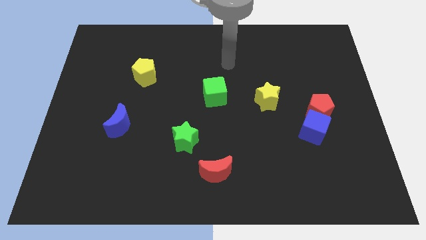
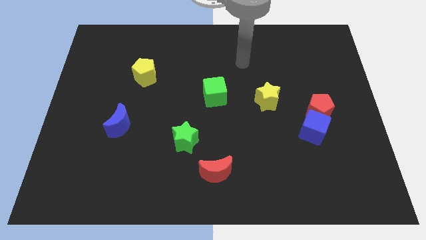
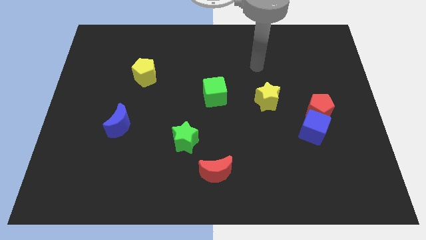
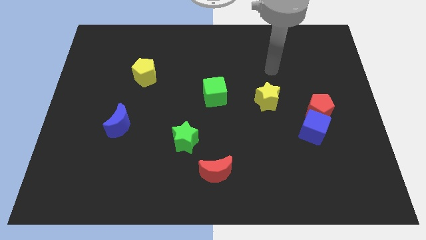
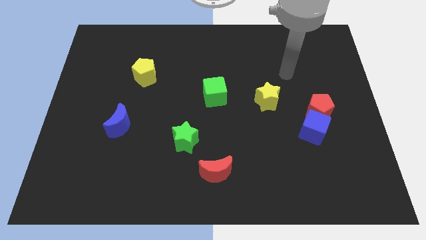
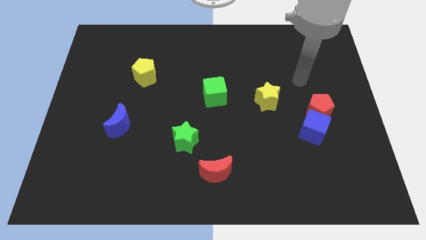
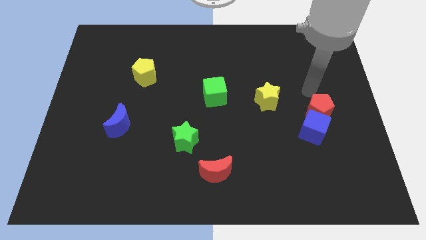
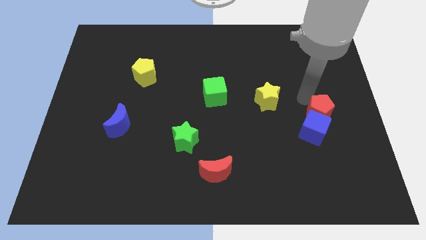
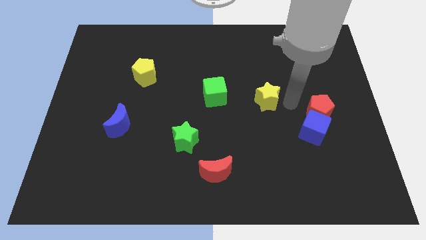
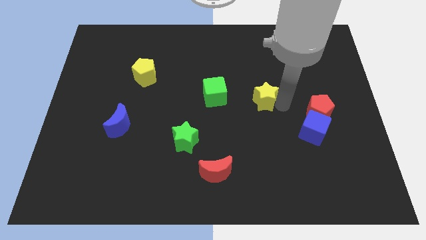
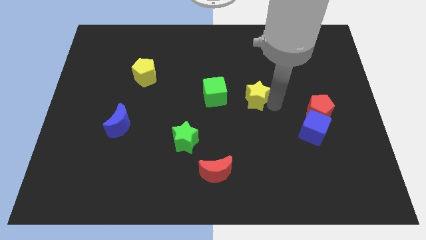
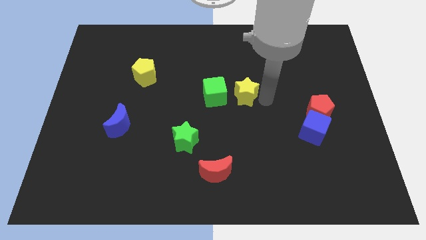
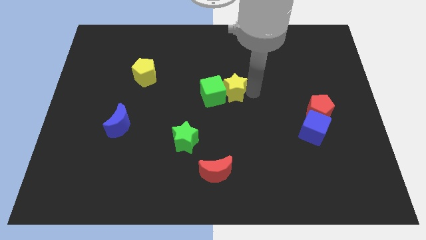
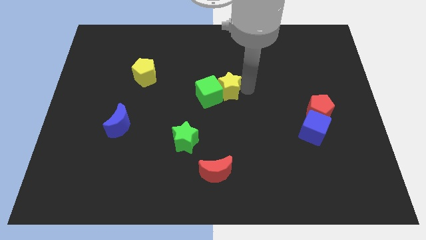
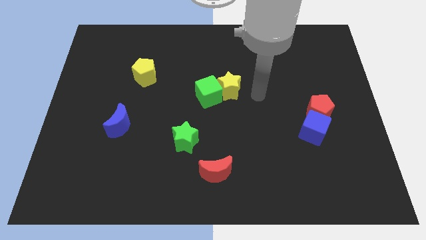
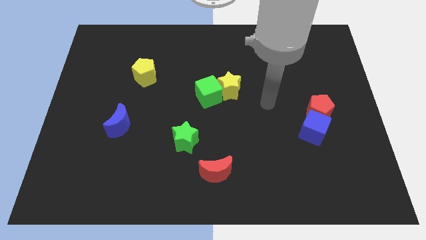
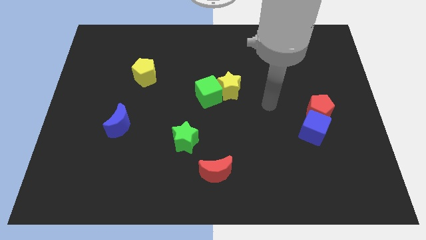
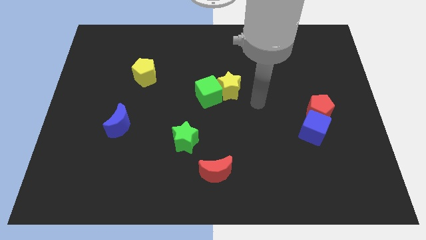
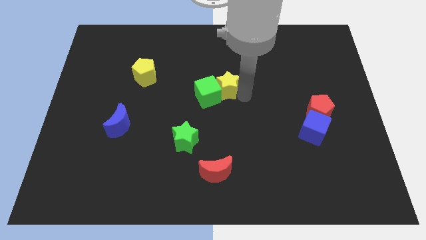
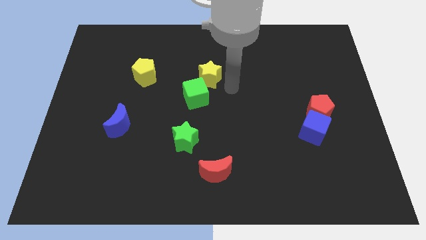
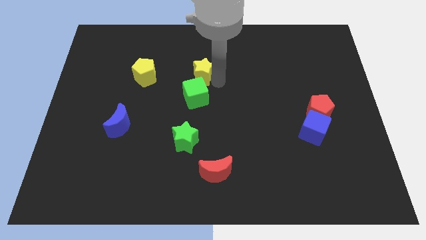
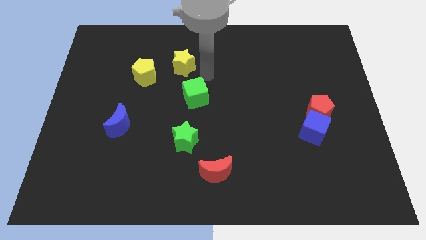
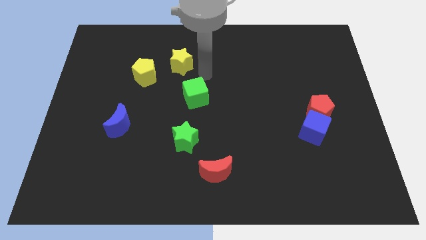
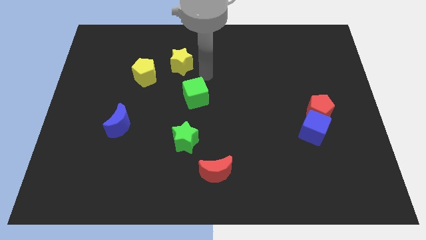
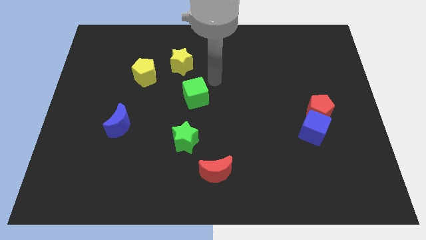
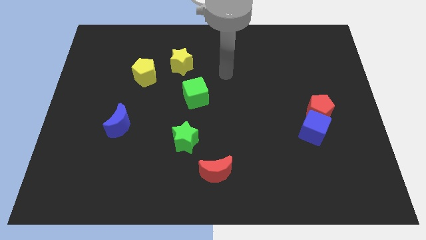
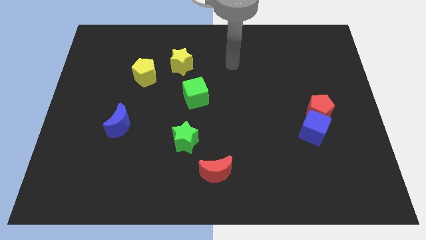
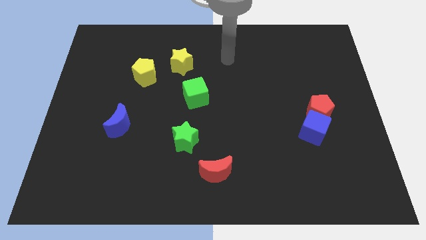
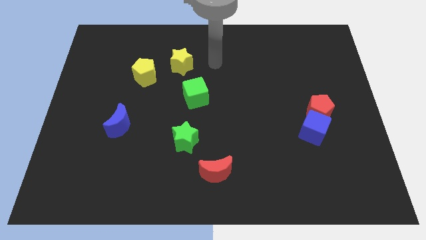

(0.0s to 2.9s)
place the yellow star to the right of yellow pentagon

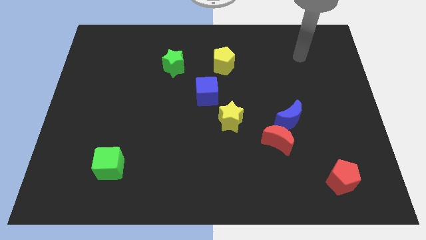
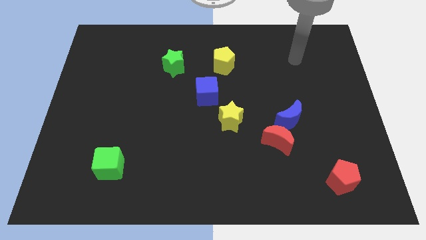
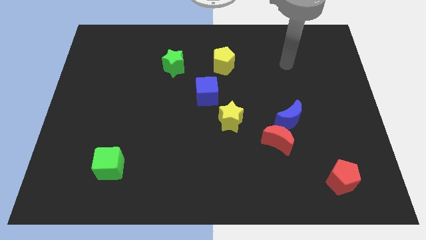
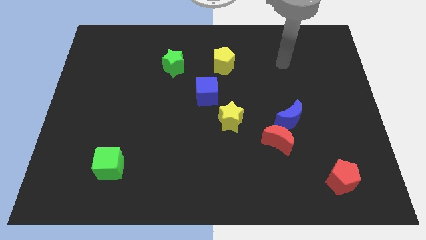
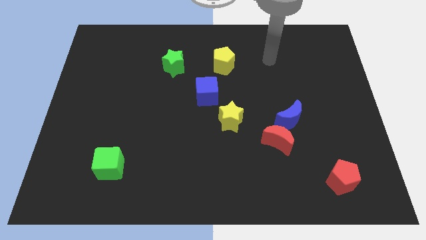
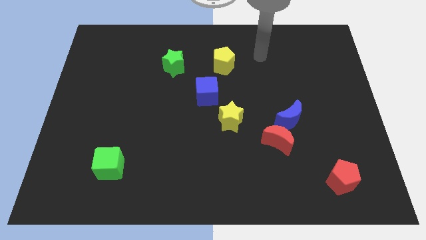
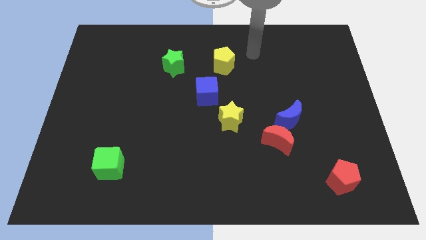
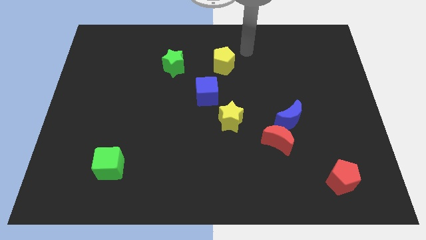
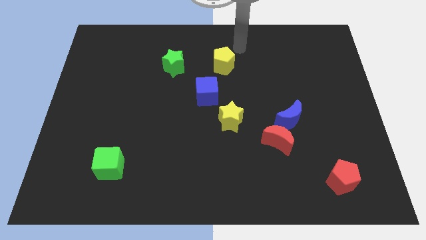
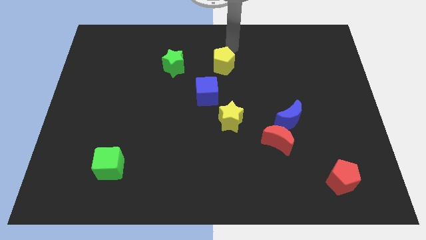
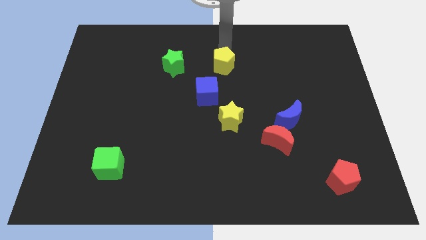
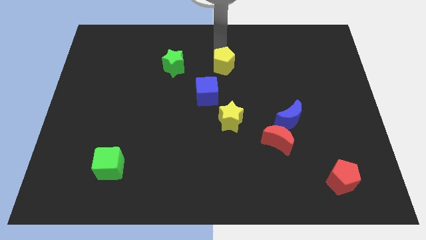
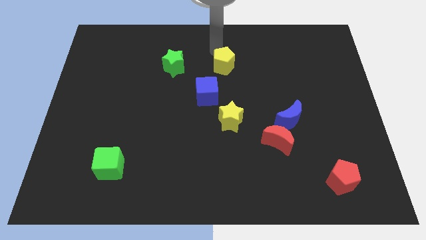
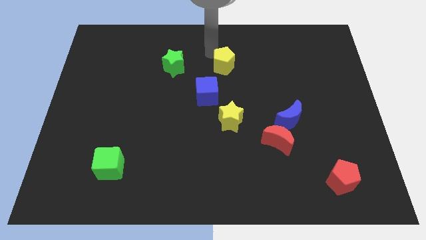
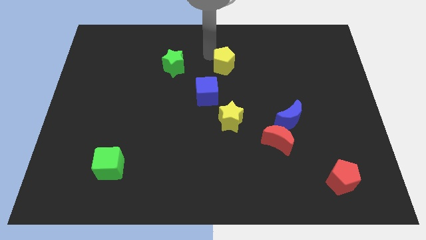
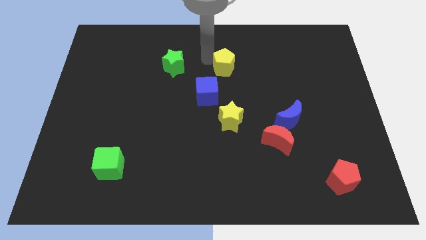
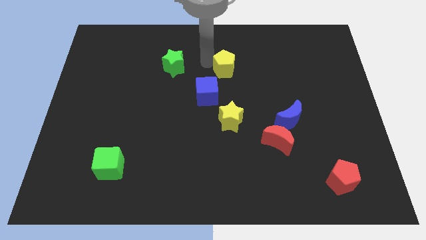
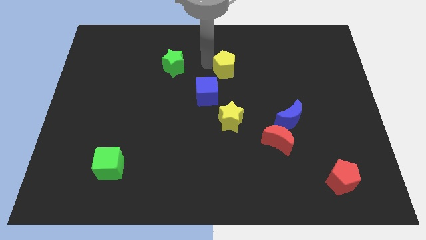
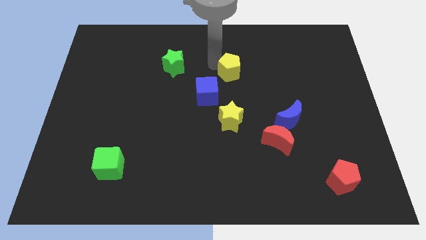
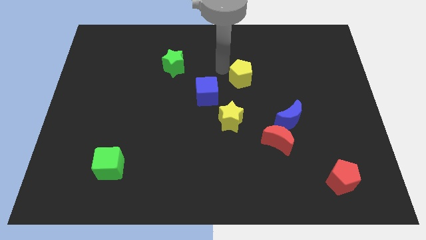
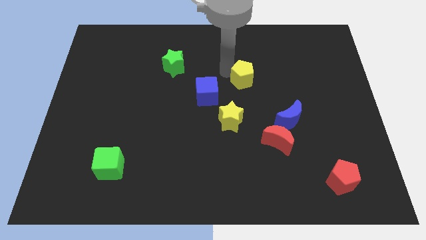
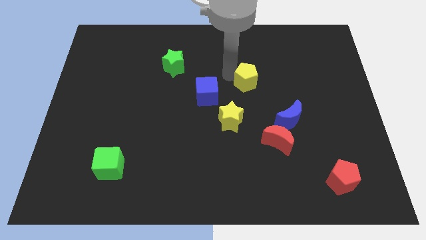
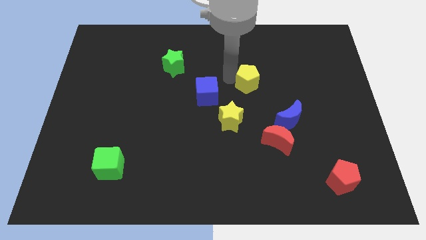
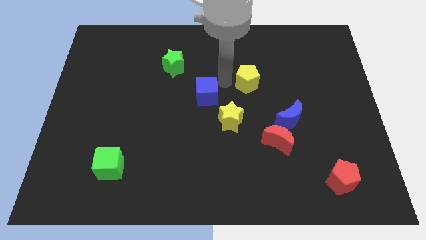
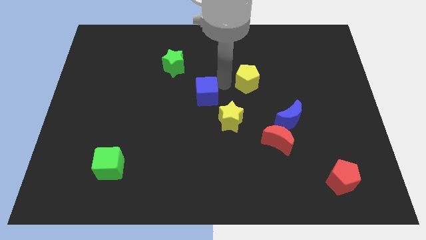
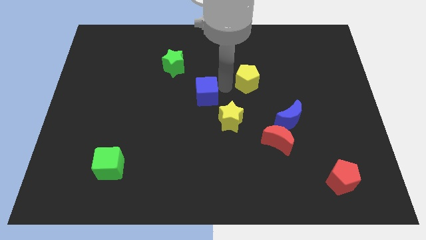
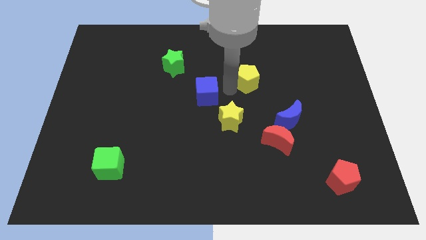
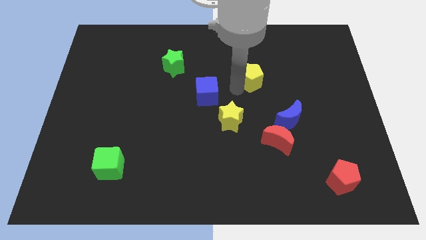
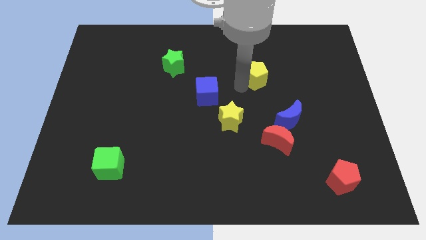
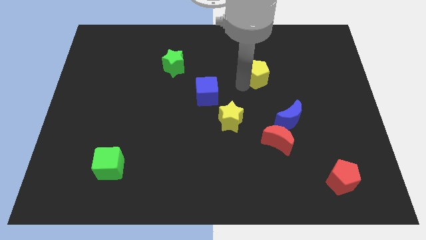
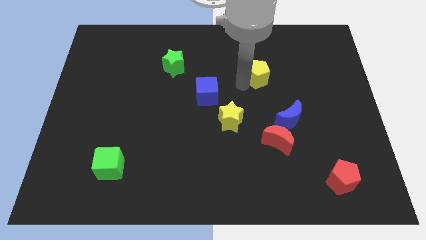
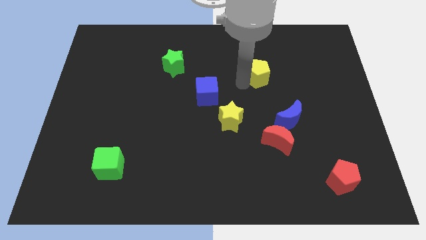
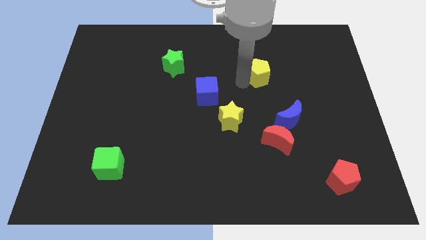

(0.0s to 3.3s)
move the yellow pentagon diagonally to the top right of the blue cube

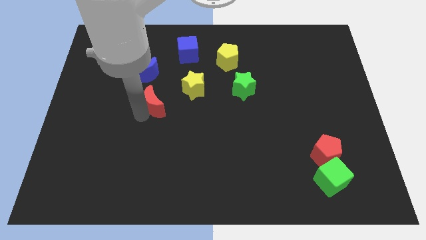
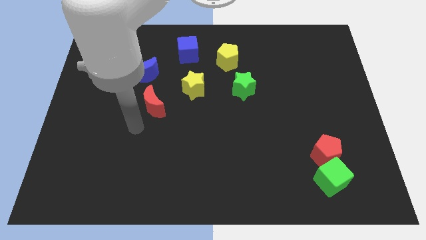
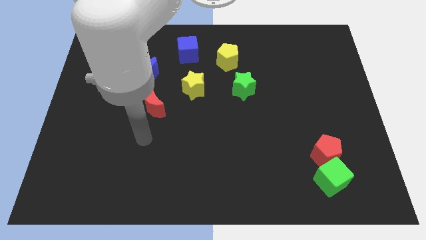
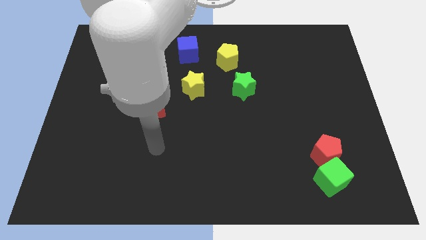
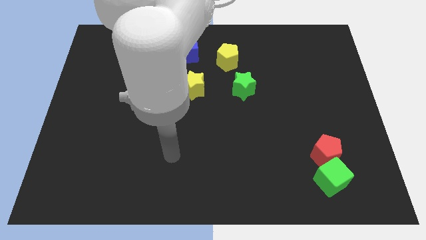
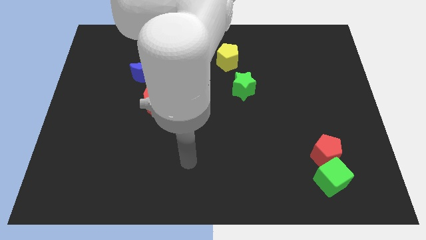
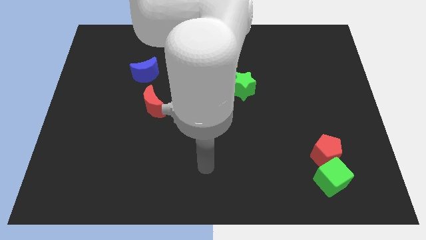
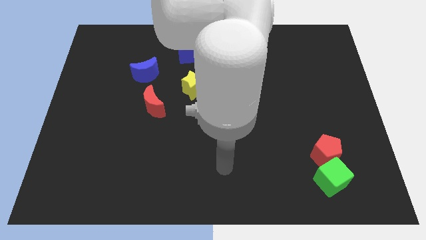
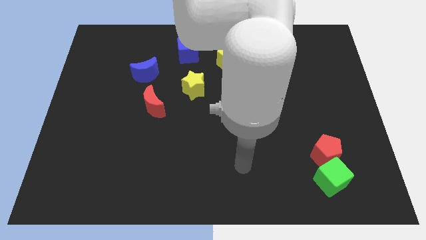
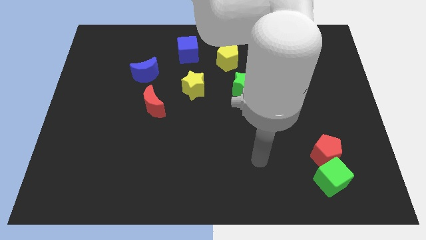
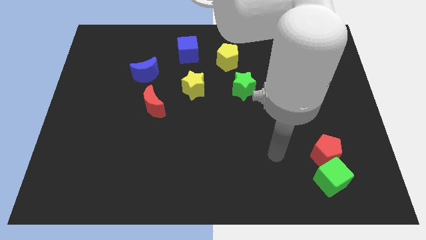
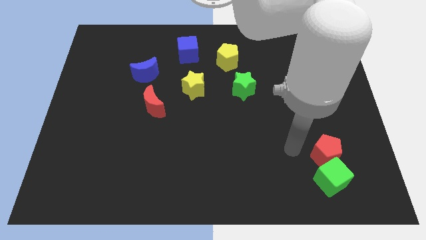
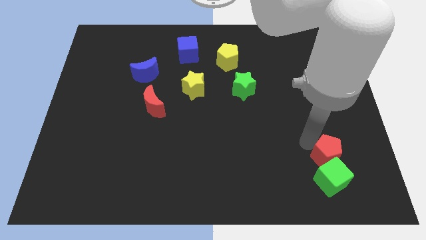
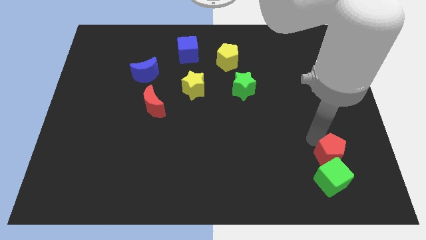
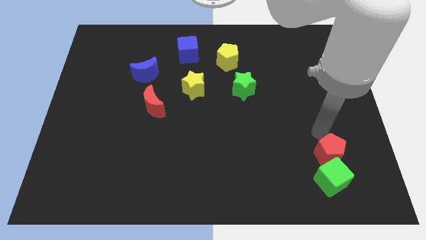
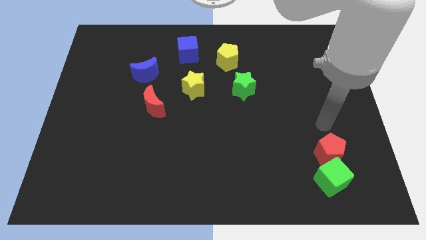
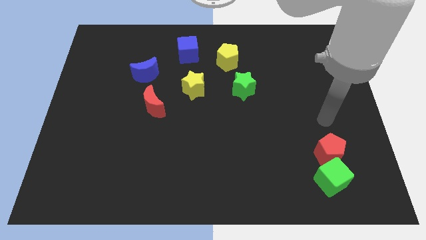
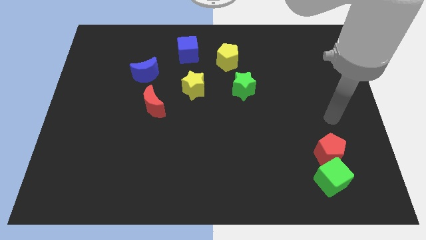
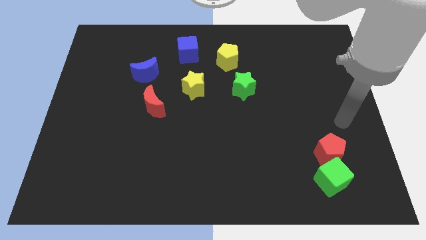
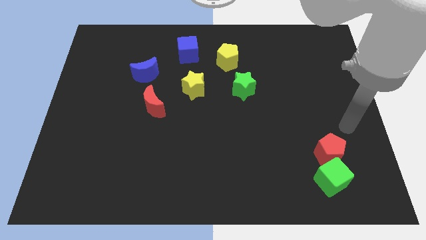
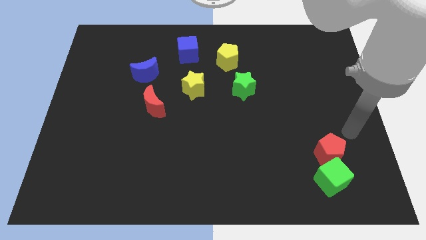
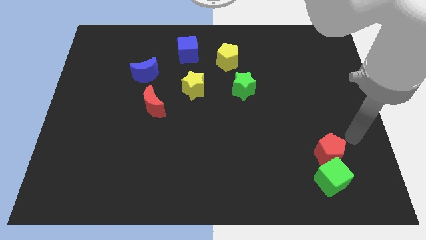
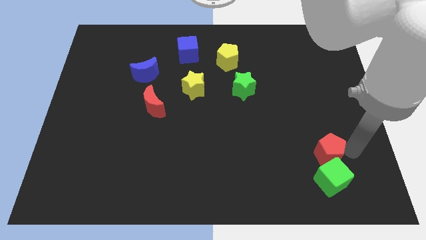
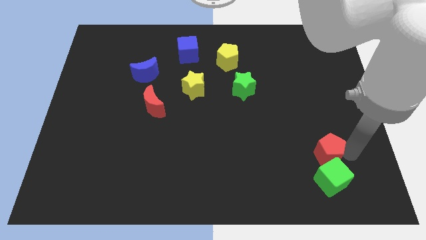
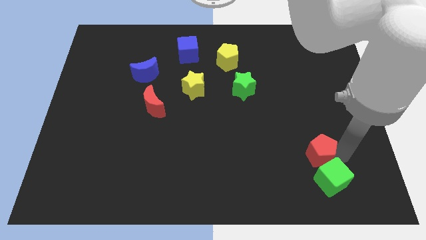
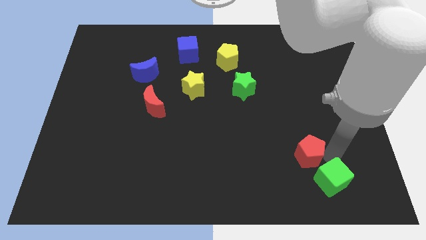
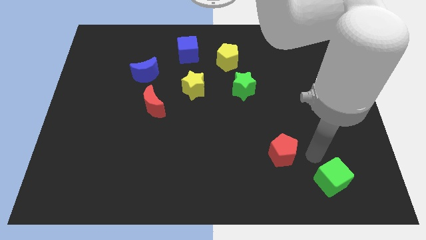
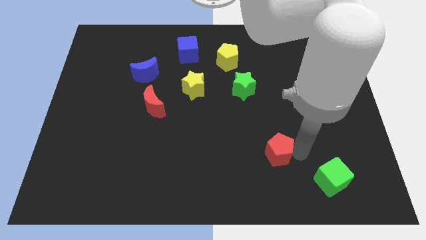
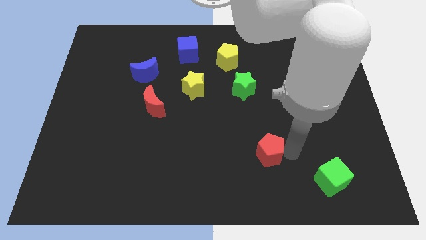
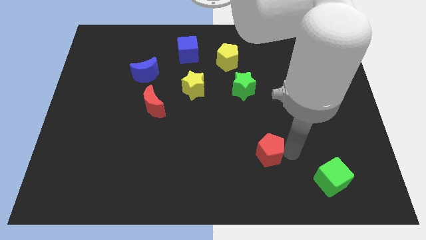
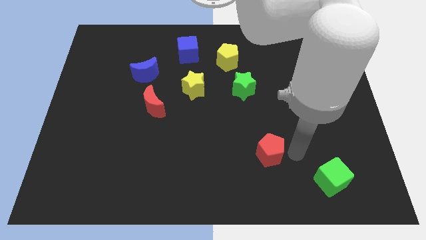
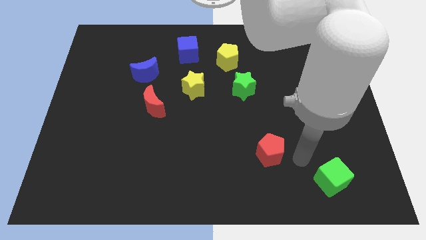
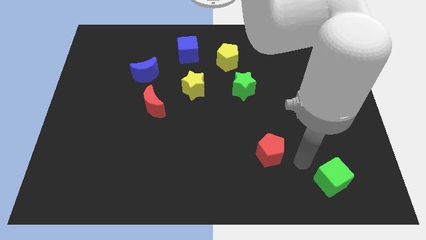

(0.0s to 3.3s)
push red pentagon to the center of the board
